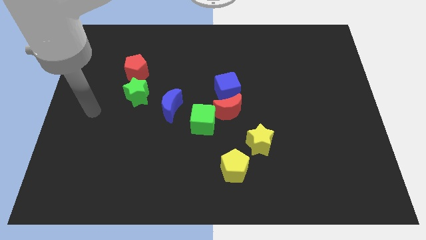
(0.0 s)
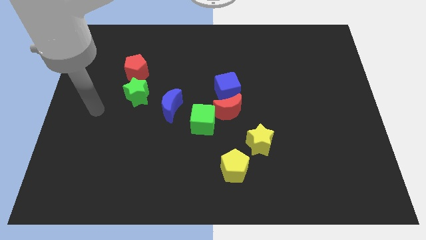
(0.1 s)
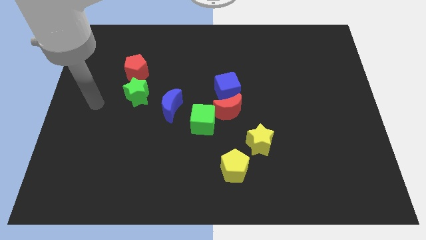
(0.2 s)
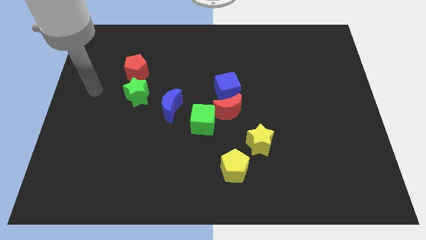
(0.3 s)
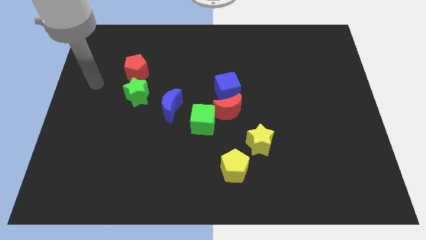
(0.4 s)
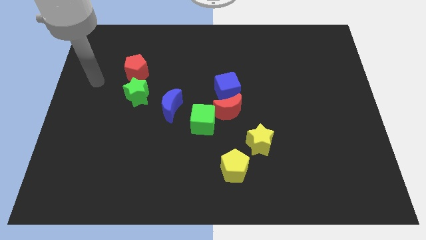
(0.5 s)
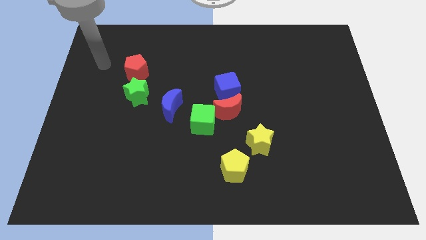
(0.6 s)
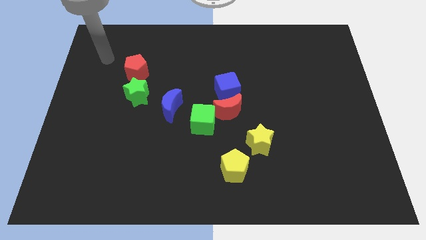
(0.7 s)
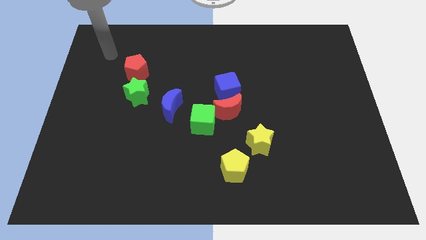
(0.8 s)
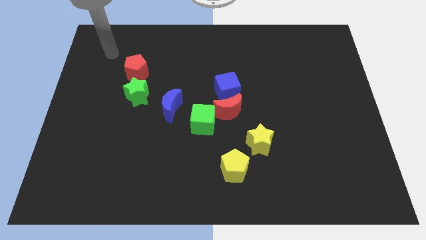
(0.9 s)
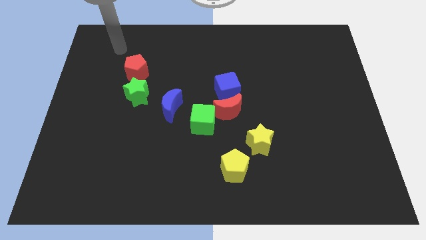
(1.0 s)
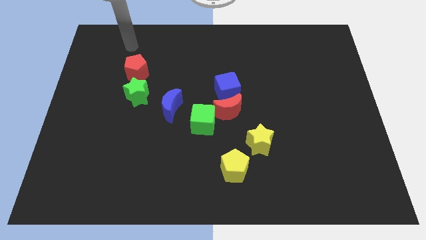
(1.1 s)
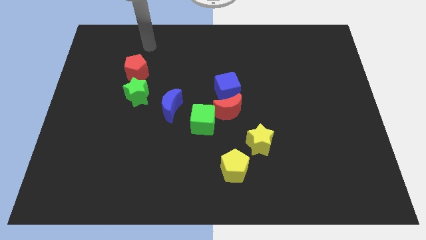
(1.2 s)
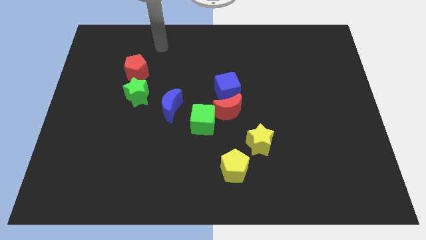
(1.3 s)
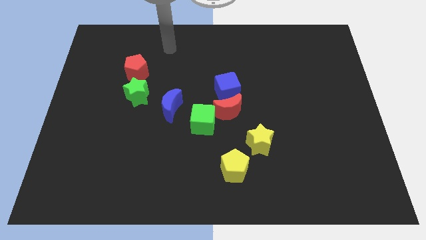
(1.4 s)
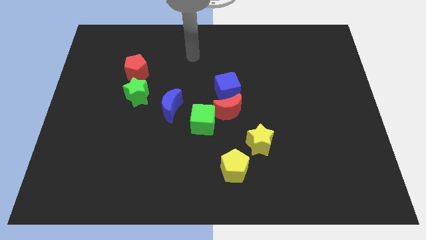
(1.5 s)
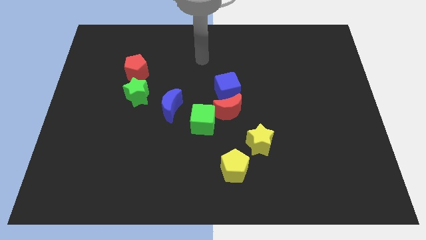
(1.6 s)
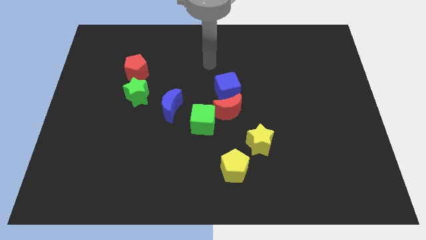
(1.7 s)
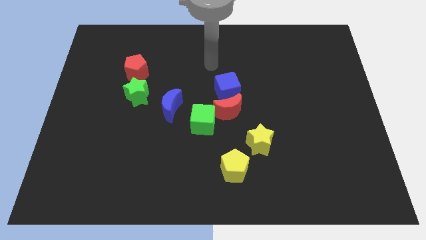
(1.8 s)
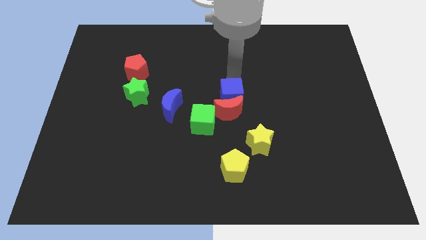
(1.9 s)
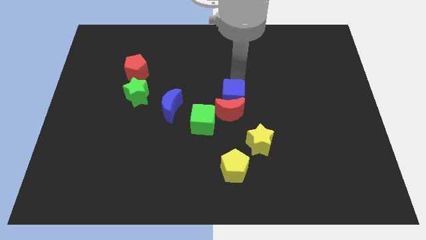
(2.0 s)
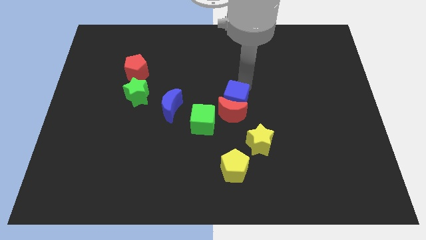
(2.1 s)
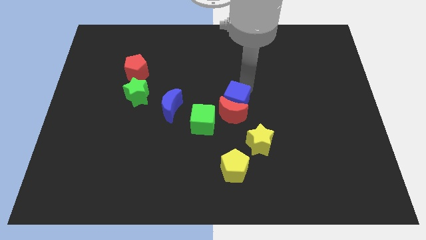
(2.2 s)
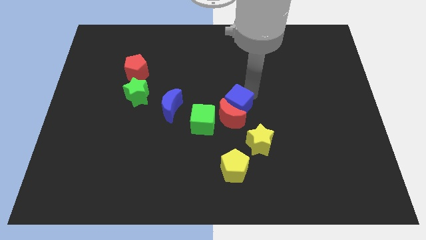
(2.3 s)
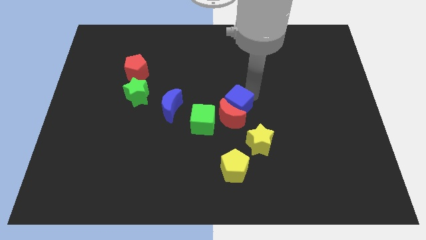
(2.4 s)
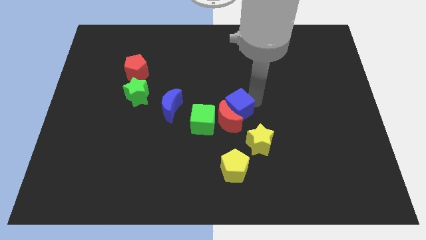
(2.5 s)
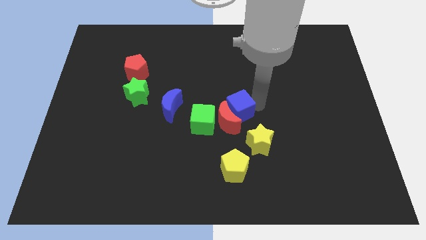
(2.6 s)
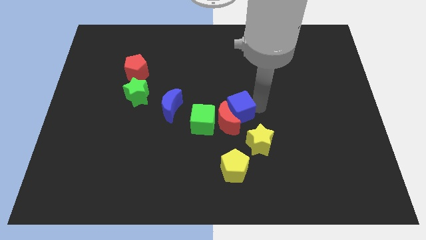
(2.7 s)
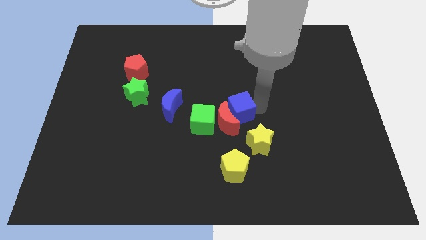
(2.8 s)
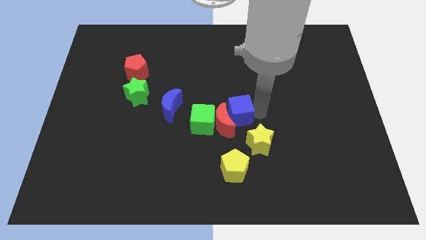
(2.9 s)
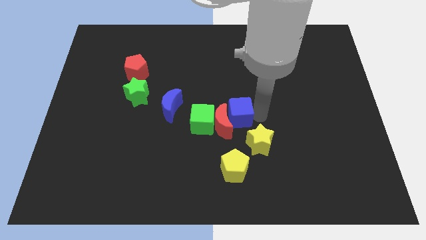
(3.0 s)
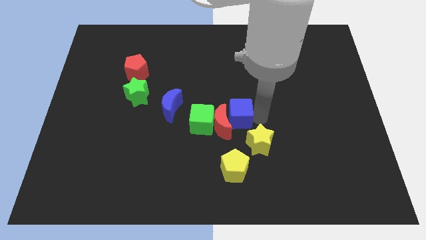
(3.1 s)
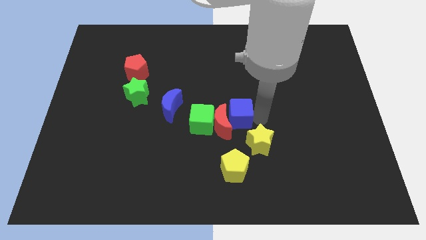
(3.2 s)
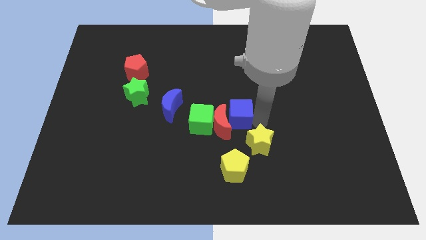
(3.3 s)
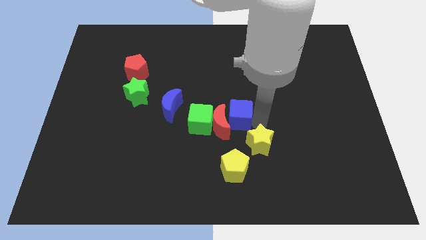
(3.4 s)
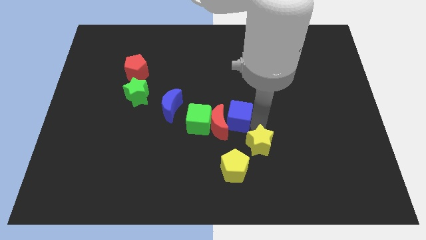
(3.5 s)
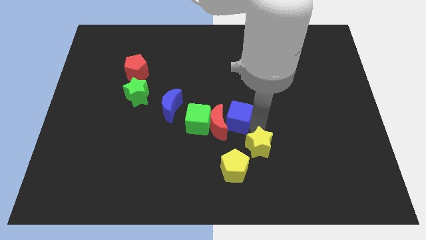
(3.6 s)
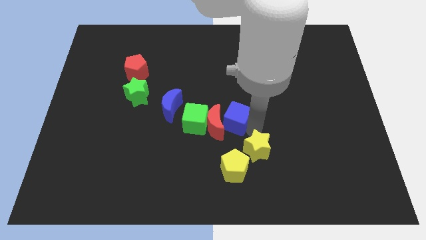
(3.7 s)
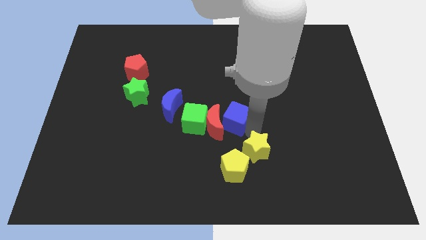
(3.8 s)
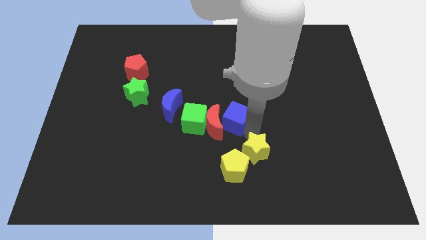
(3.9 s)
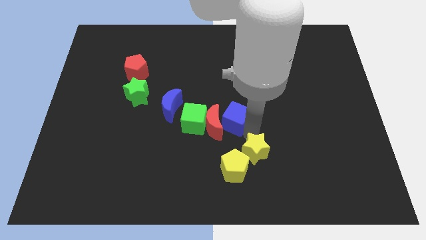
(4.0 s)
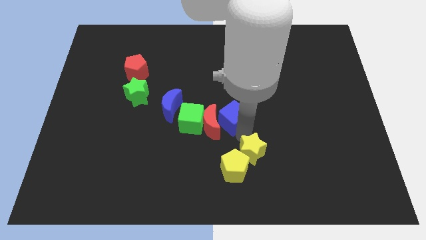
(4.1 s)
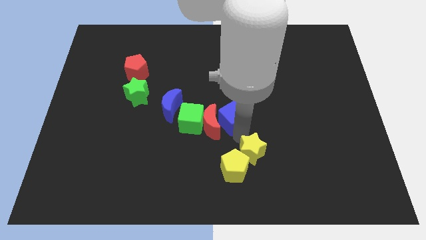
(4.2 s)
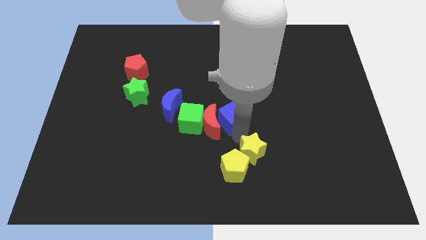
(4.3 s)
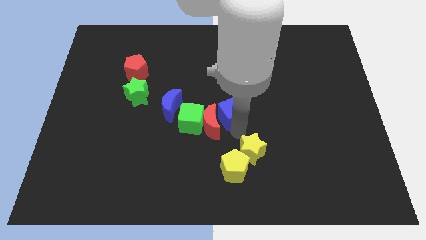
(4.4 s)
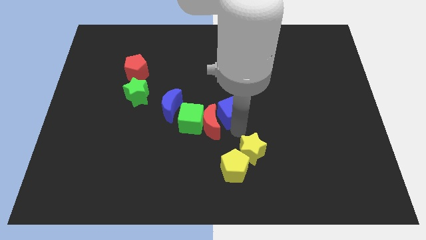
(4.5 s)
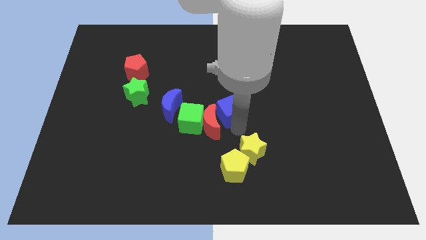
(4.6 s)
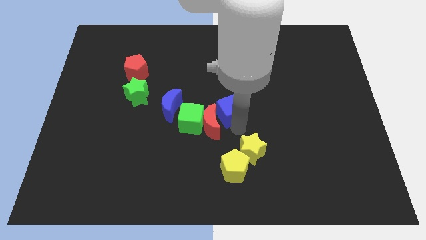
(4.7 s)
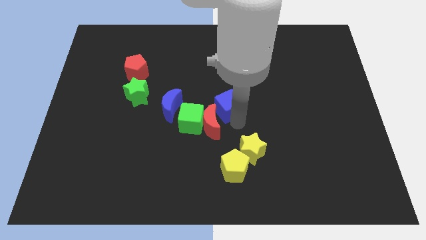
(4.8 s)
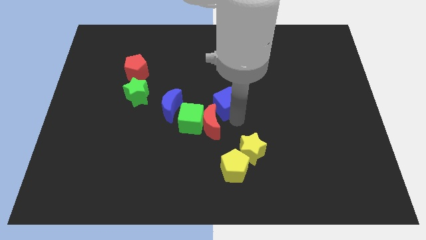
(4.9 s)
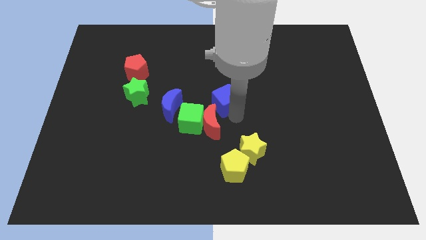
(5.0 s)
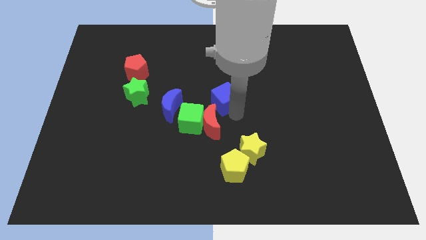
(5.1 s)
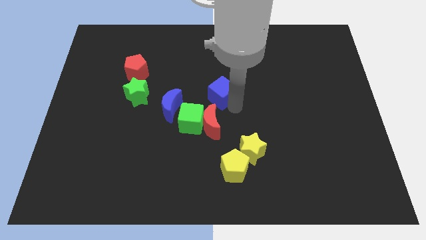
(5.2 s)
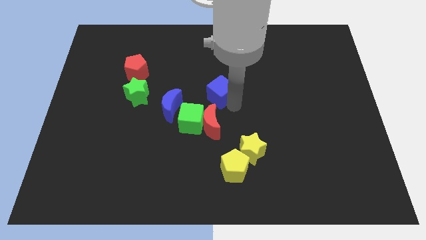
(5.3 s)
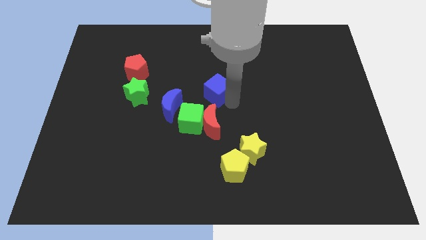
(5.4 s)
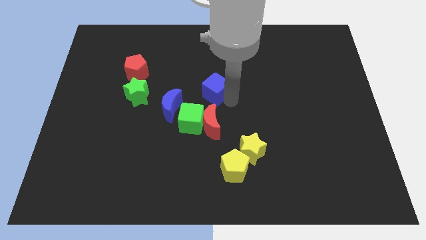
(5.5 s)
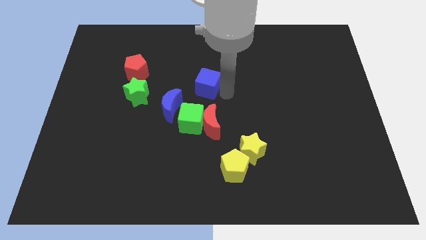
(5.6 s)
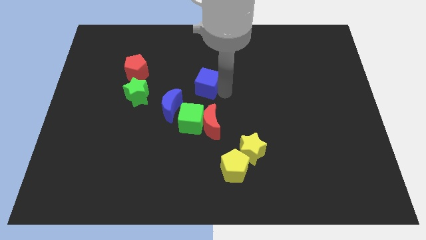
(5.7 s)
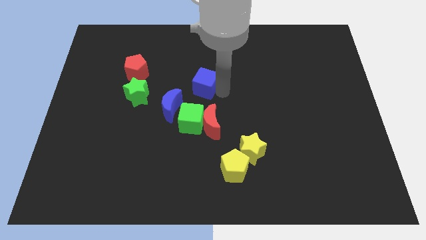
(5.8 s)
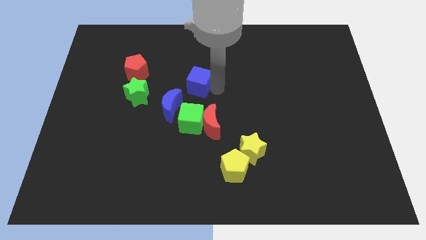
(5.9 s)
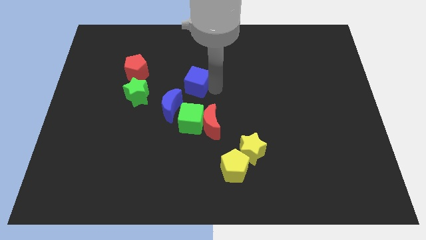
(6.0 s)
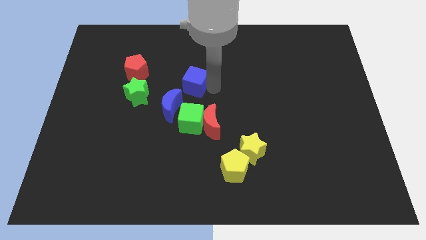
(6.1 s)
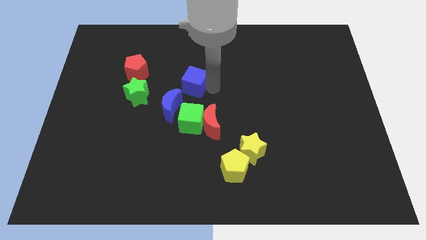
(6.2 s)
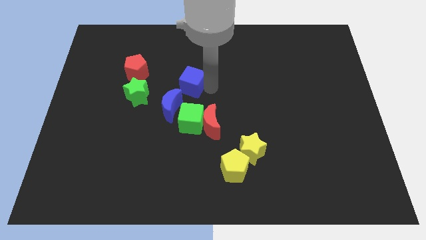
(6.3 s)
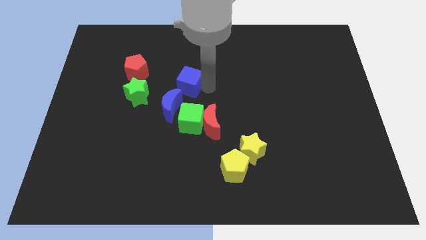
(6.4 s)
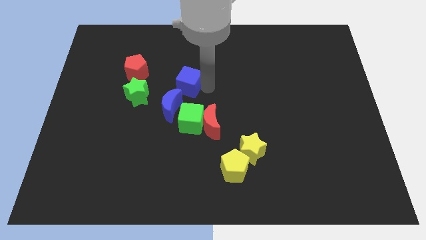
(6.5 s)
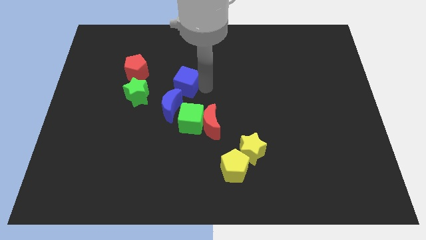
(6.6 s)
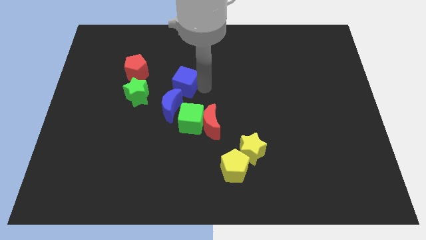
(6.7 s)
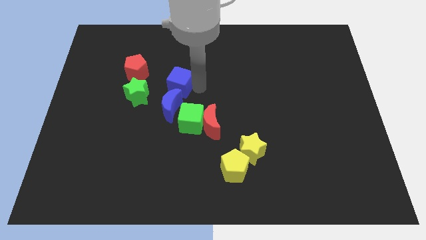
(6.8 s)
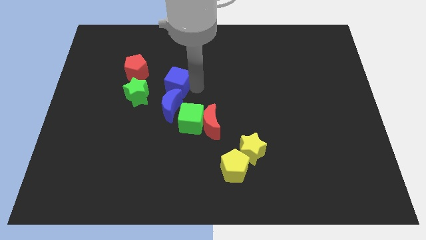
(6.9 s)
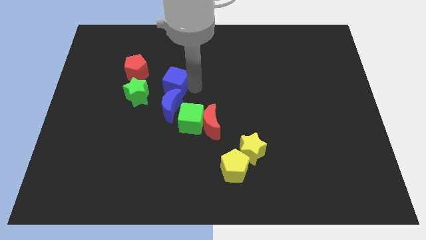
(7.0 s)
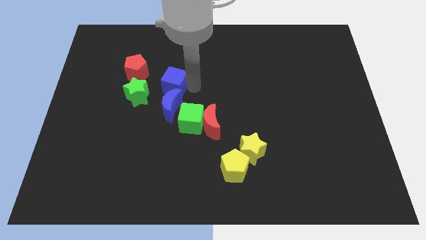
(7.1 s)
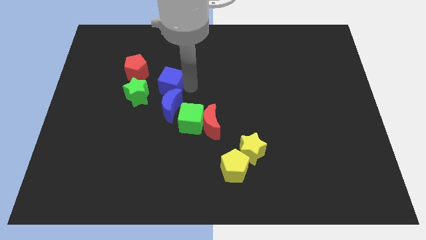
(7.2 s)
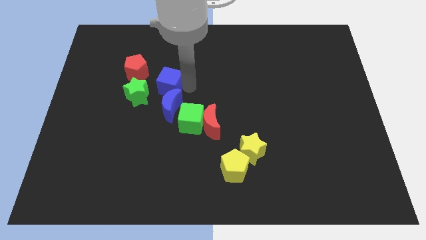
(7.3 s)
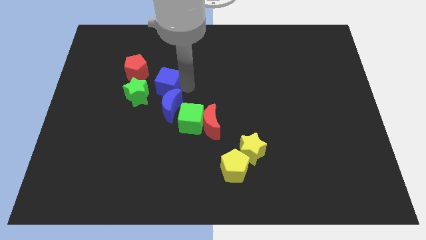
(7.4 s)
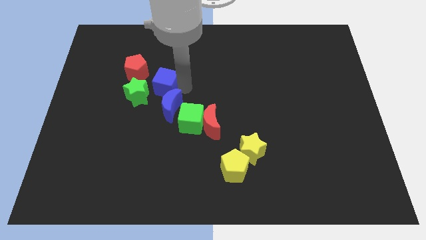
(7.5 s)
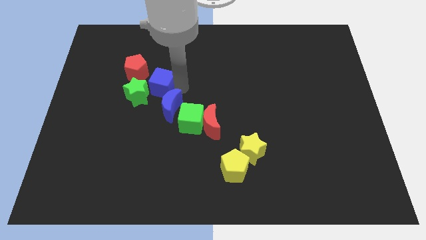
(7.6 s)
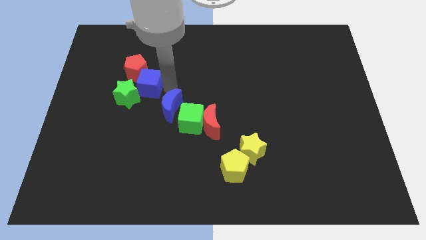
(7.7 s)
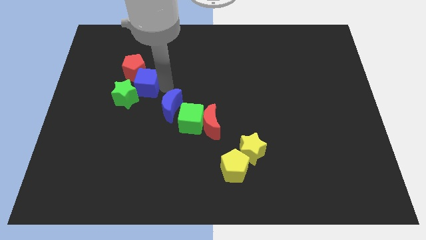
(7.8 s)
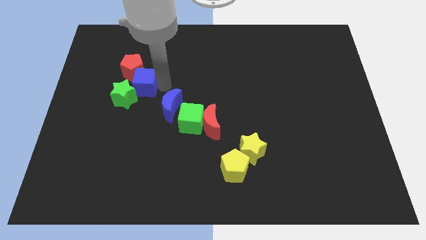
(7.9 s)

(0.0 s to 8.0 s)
push the blue cube close to the red pentagon

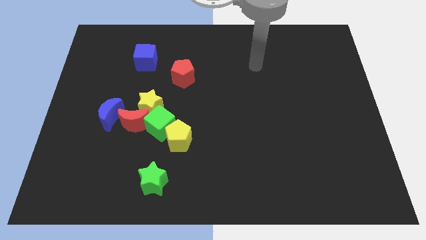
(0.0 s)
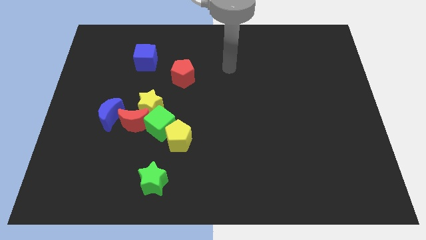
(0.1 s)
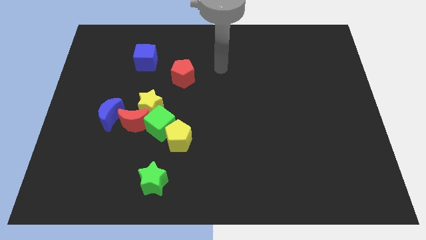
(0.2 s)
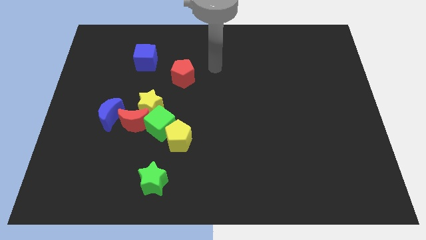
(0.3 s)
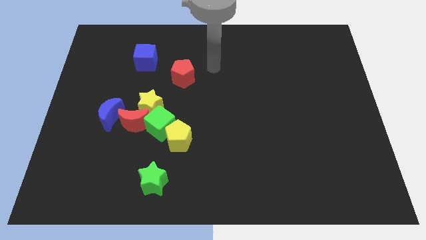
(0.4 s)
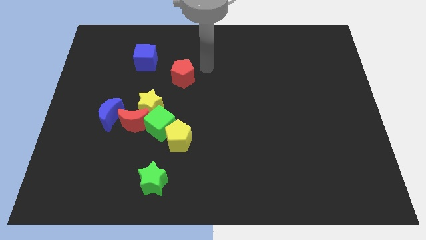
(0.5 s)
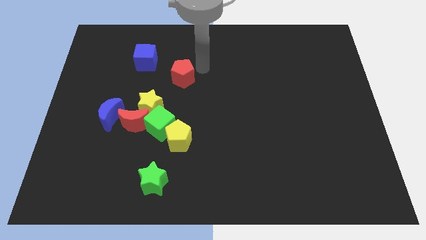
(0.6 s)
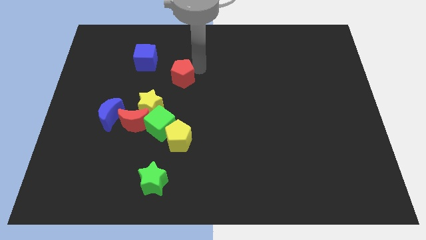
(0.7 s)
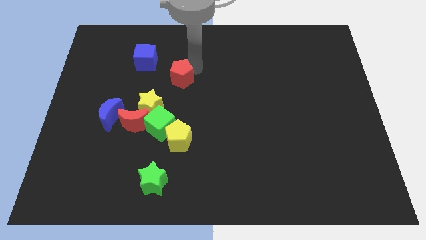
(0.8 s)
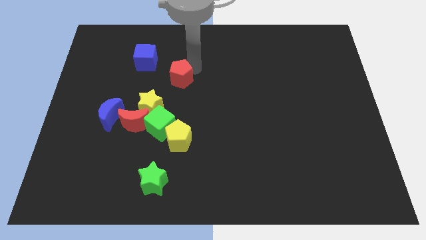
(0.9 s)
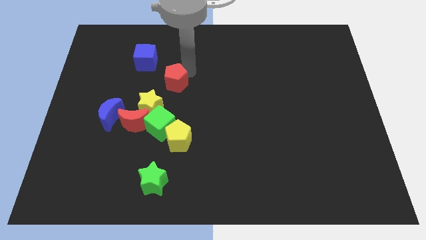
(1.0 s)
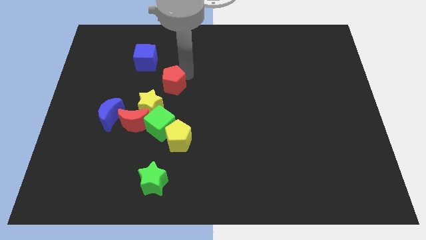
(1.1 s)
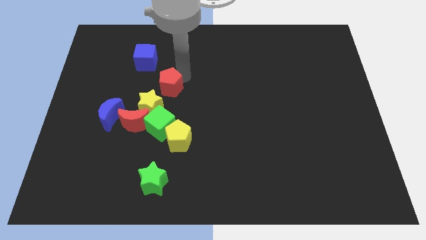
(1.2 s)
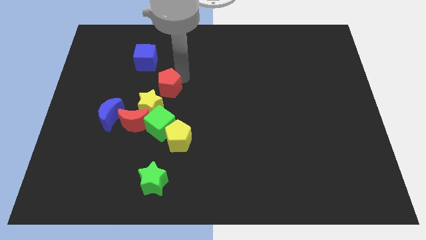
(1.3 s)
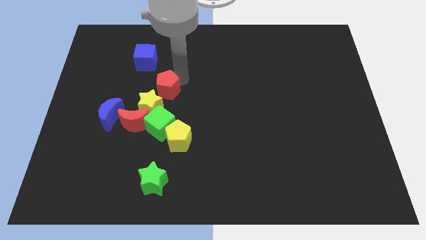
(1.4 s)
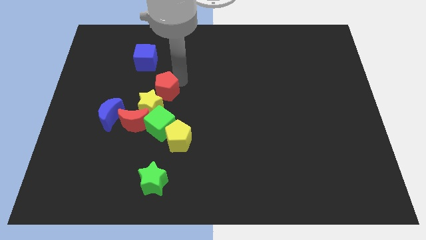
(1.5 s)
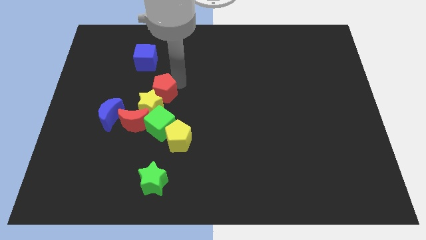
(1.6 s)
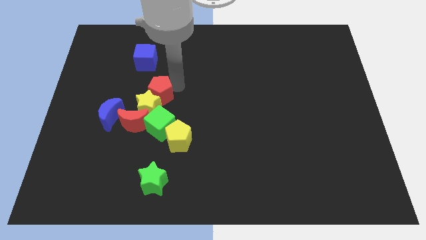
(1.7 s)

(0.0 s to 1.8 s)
slide the red pentagon to the yellow star
